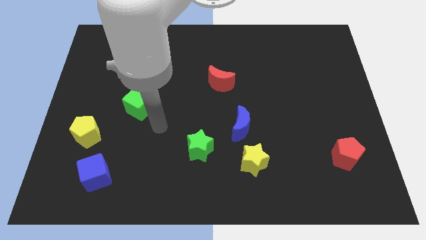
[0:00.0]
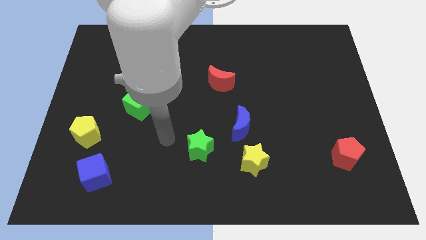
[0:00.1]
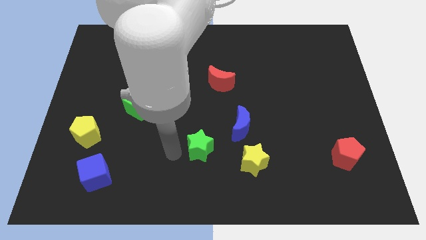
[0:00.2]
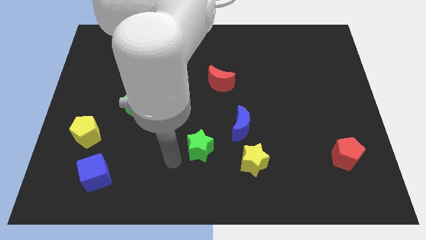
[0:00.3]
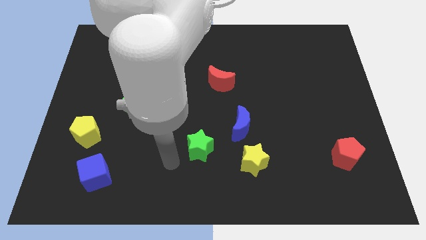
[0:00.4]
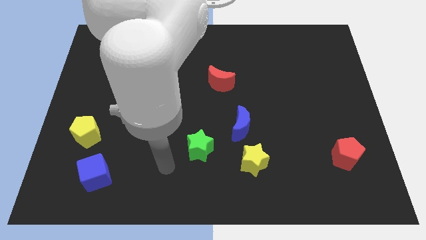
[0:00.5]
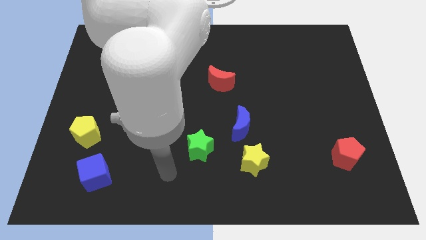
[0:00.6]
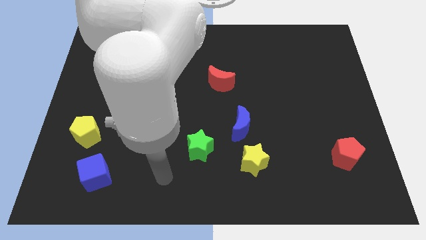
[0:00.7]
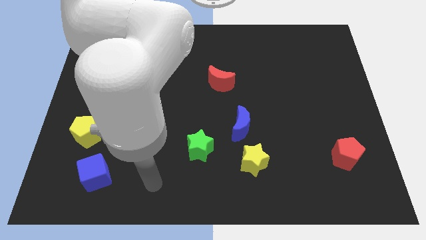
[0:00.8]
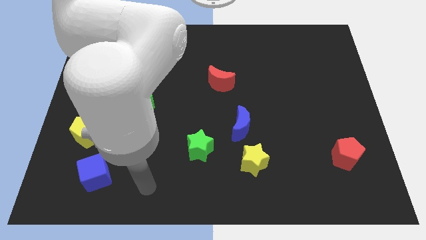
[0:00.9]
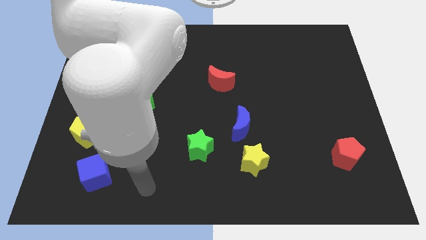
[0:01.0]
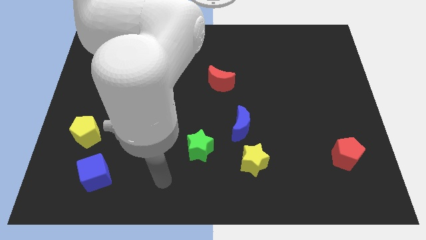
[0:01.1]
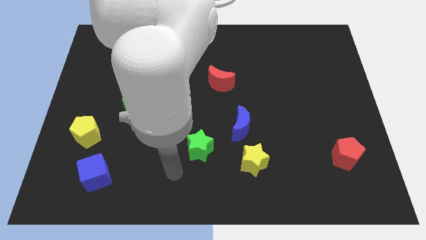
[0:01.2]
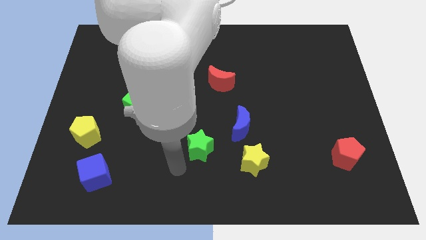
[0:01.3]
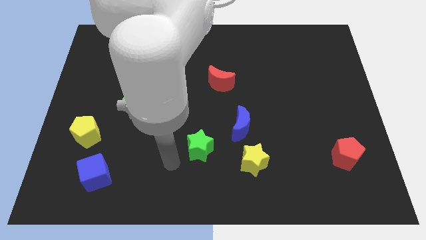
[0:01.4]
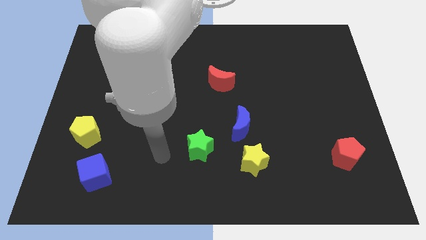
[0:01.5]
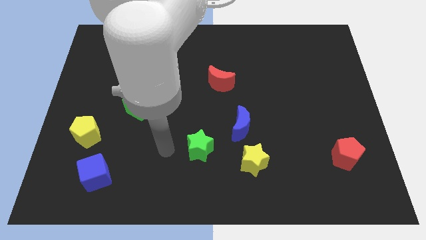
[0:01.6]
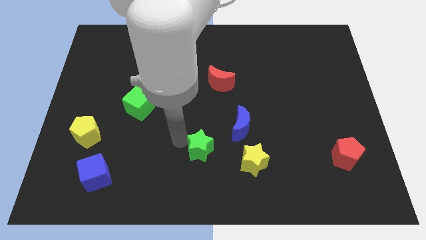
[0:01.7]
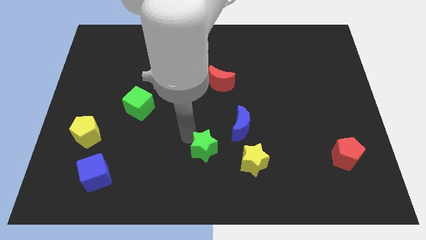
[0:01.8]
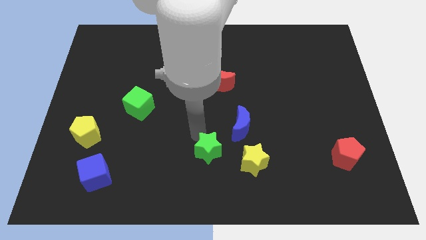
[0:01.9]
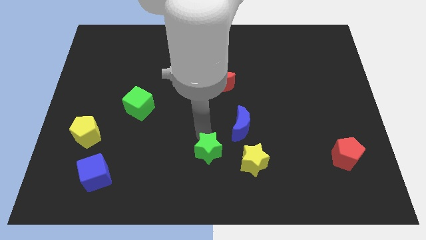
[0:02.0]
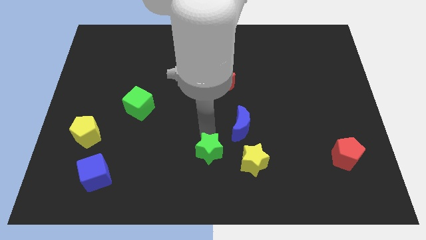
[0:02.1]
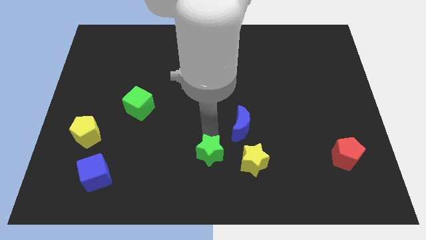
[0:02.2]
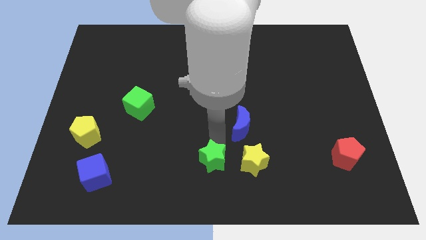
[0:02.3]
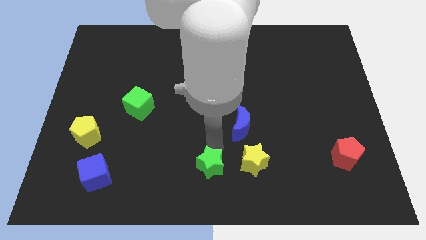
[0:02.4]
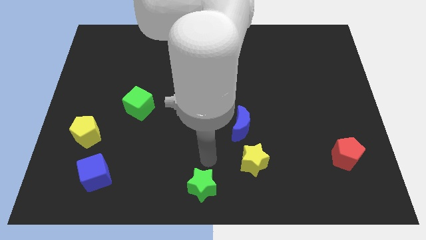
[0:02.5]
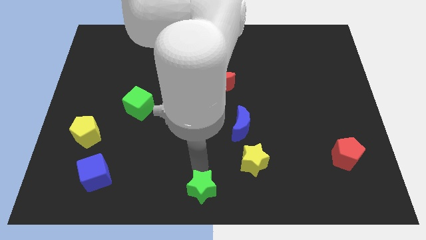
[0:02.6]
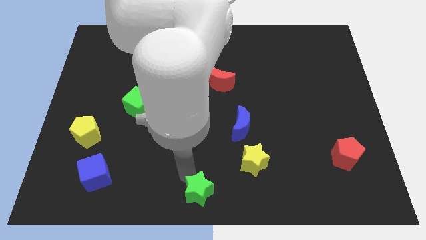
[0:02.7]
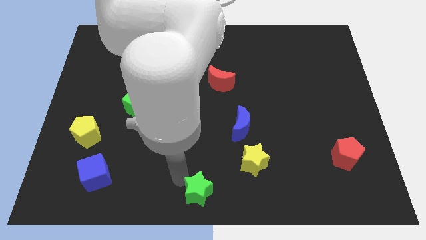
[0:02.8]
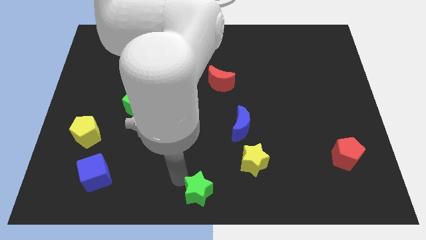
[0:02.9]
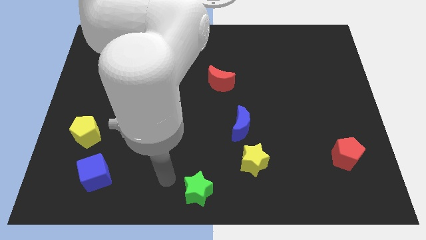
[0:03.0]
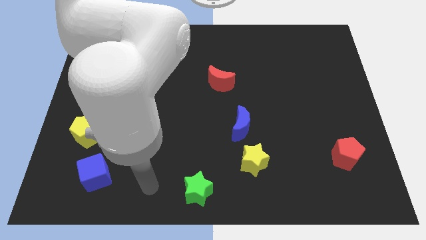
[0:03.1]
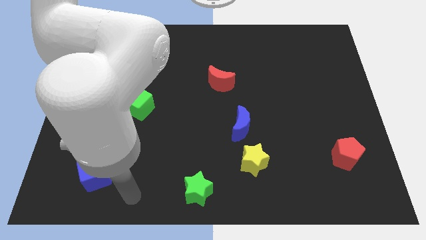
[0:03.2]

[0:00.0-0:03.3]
push the green star to the bottom of the board

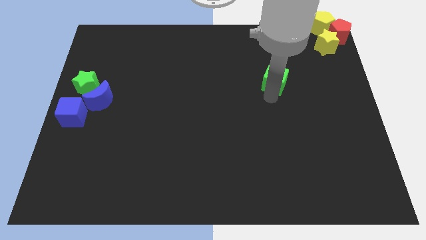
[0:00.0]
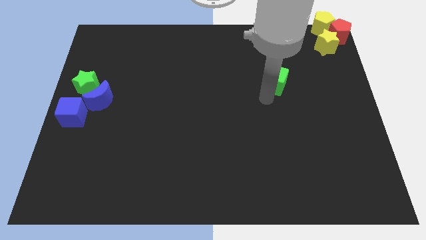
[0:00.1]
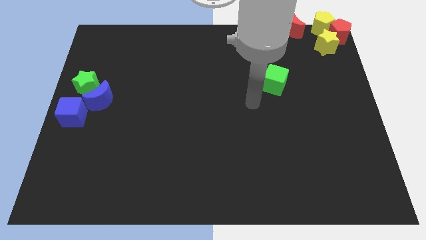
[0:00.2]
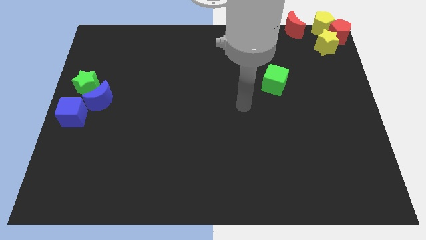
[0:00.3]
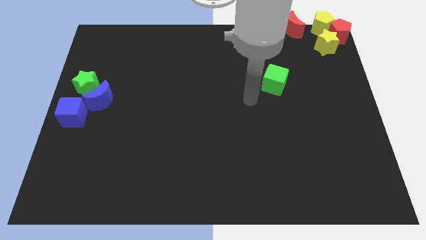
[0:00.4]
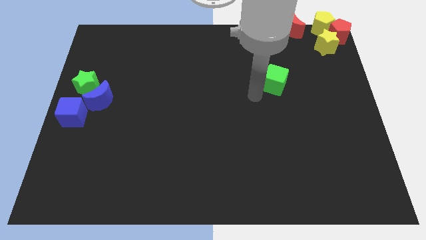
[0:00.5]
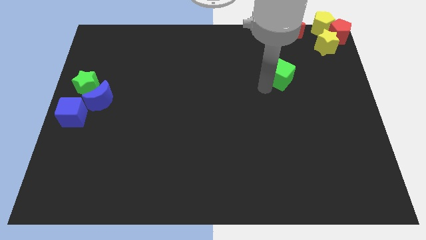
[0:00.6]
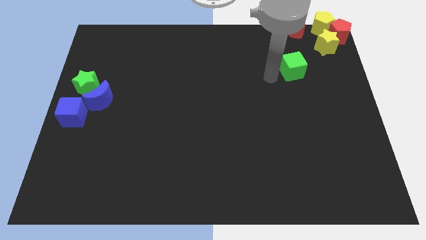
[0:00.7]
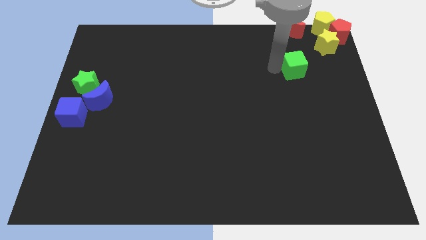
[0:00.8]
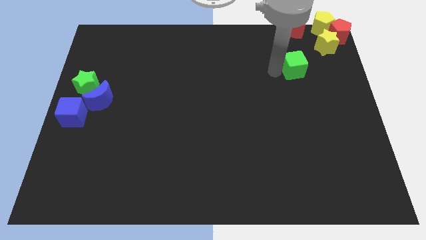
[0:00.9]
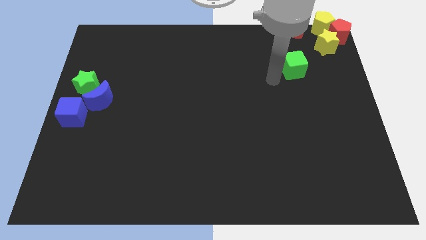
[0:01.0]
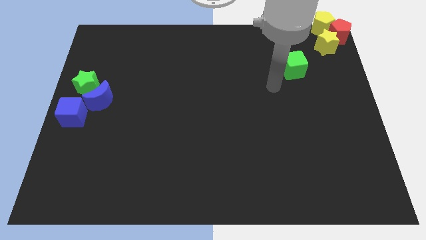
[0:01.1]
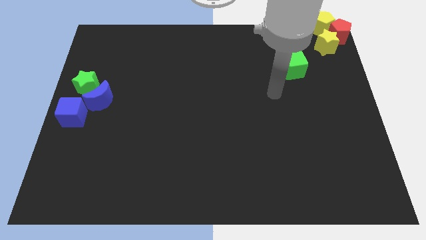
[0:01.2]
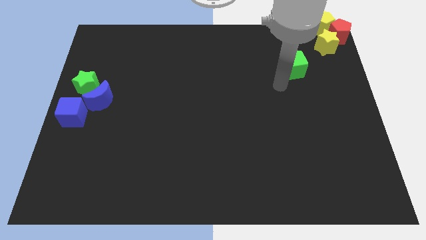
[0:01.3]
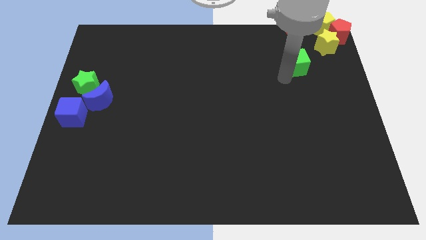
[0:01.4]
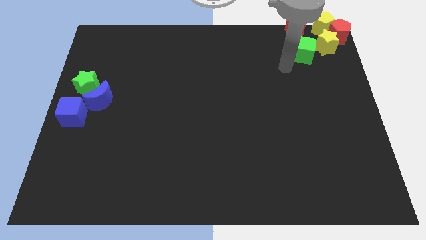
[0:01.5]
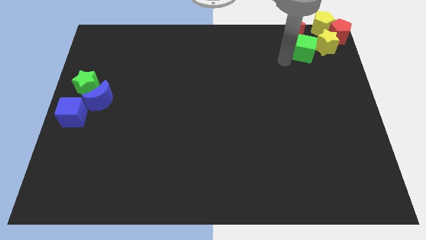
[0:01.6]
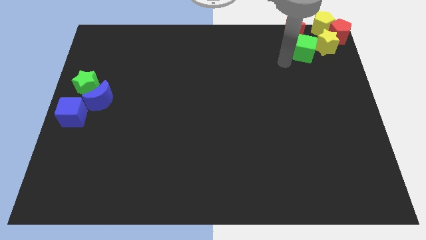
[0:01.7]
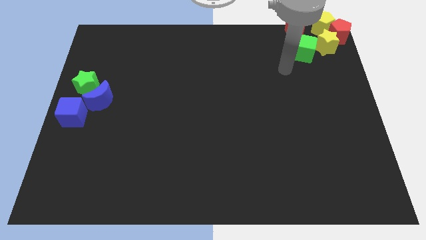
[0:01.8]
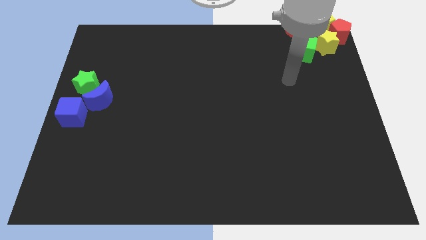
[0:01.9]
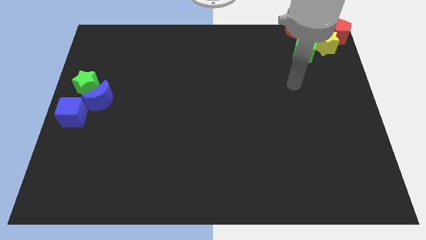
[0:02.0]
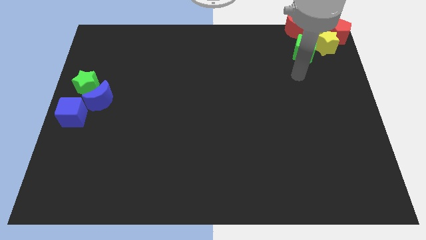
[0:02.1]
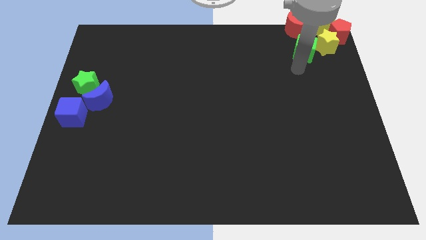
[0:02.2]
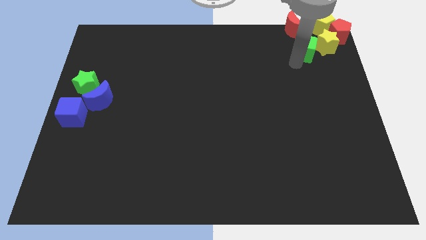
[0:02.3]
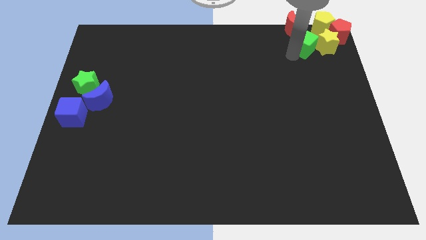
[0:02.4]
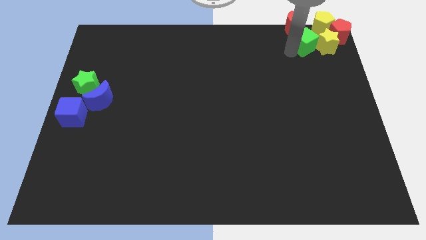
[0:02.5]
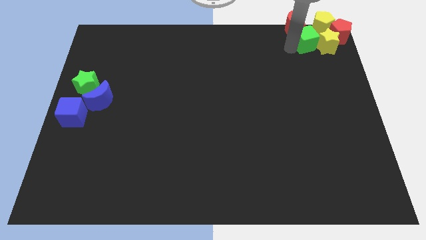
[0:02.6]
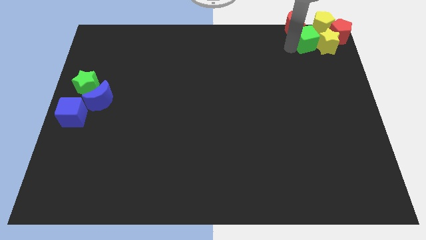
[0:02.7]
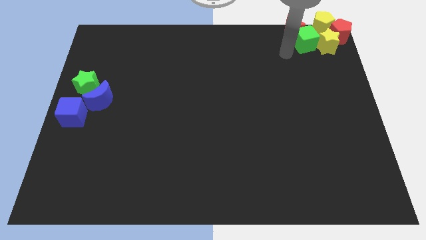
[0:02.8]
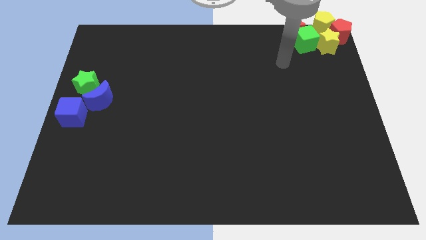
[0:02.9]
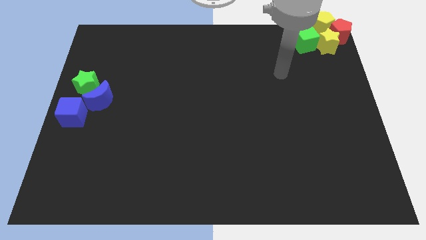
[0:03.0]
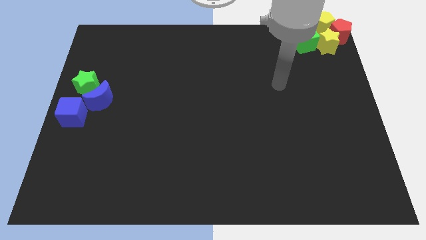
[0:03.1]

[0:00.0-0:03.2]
move the green cube into the yellow star

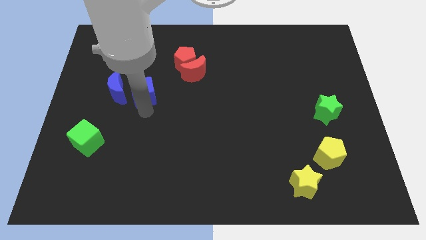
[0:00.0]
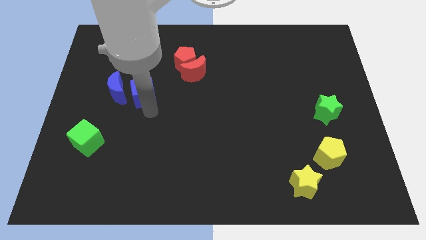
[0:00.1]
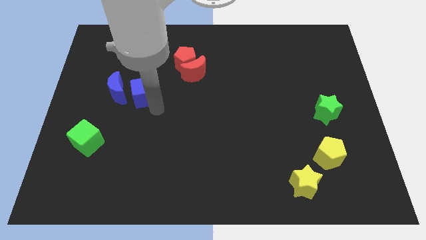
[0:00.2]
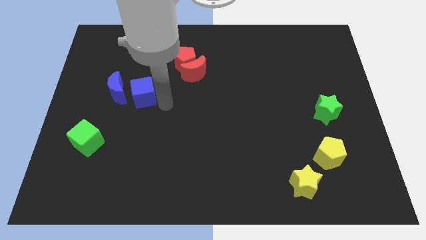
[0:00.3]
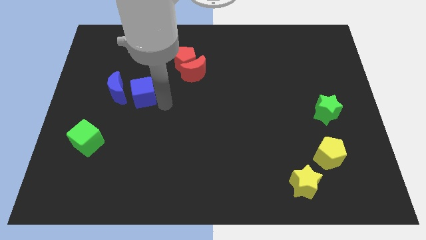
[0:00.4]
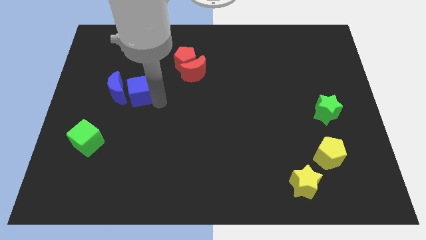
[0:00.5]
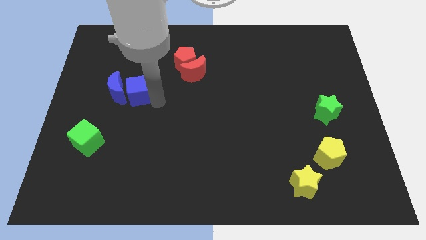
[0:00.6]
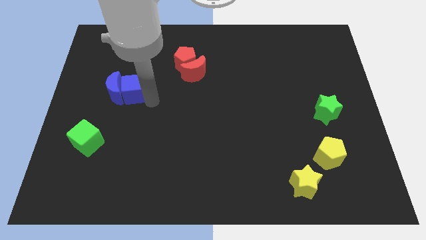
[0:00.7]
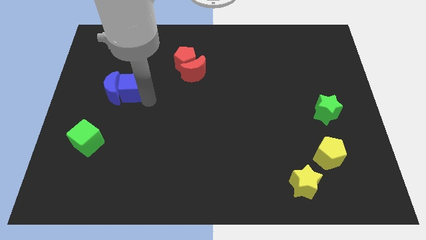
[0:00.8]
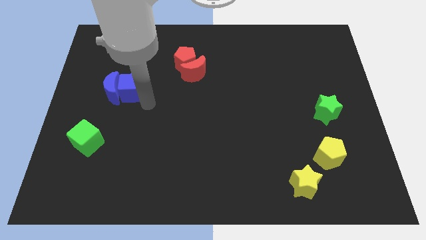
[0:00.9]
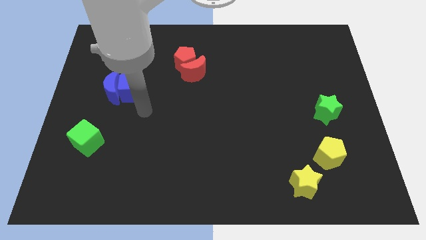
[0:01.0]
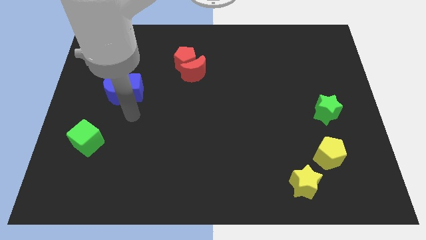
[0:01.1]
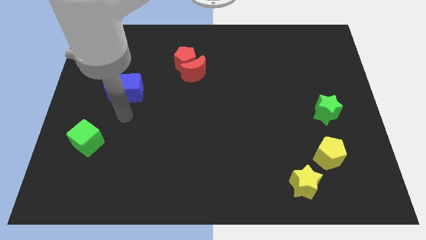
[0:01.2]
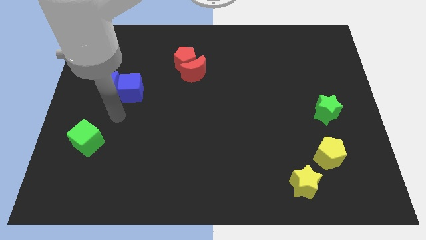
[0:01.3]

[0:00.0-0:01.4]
push the blue cube into the blue crescent

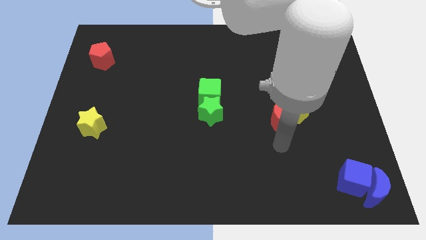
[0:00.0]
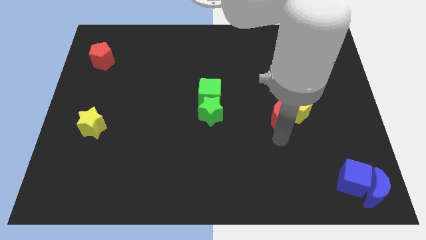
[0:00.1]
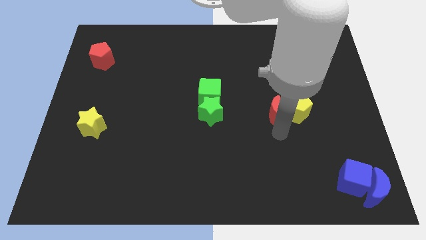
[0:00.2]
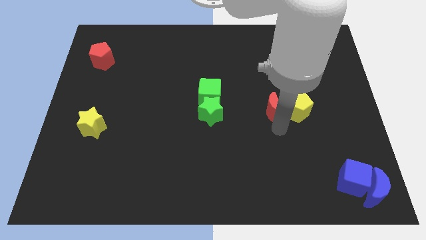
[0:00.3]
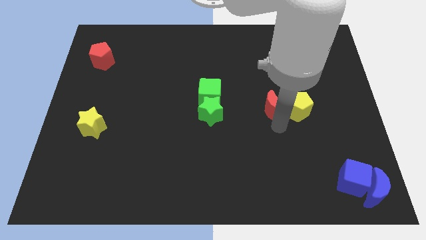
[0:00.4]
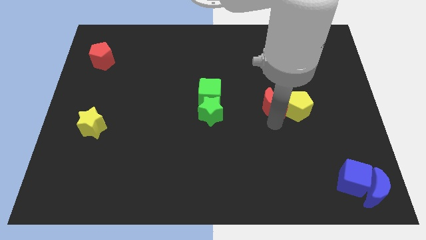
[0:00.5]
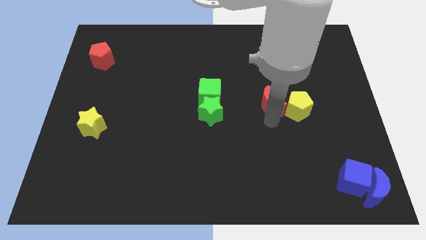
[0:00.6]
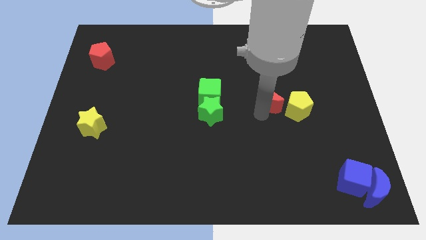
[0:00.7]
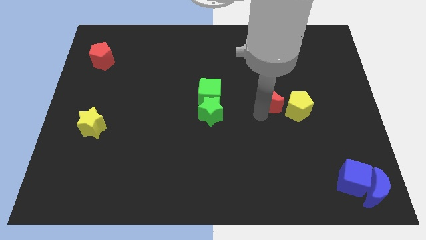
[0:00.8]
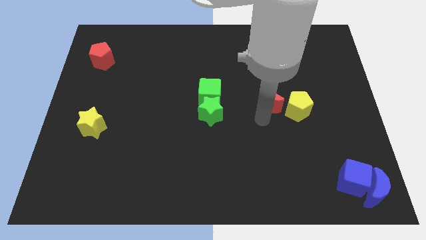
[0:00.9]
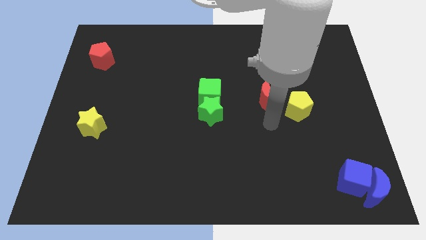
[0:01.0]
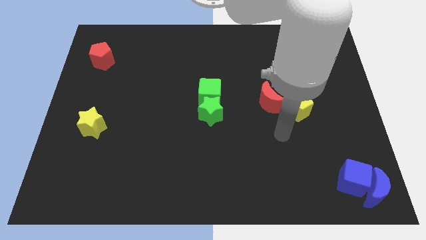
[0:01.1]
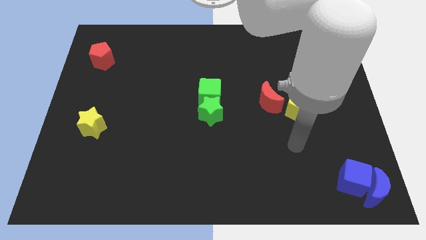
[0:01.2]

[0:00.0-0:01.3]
push the red crescent to the left of the yellow pentagon
